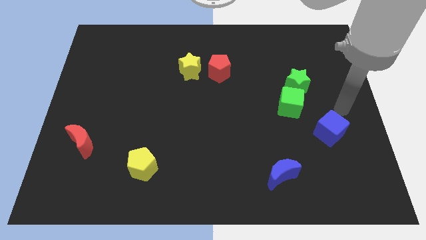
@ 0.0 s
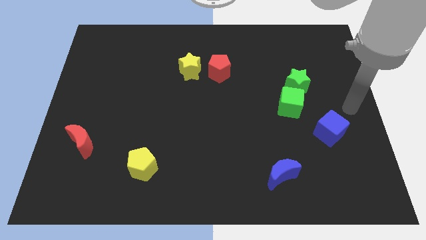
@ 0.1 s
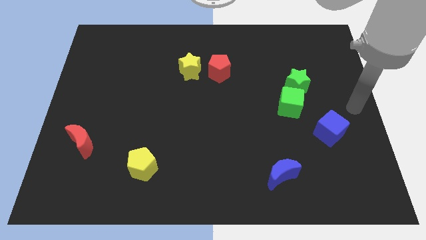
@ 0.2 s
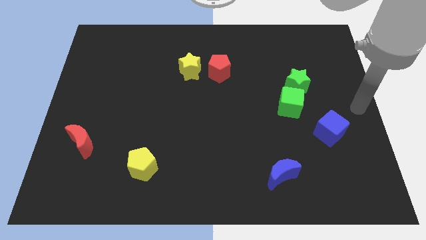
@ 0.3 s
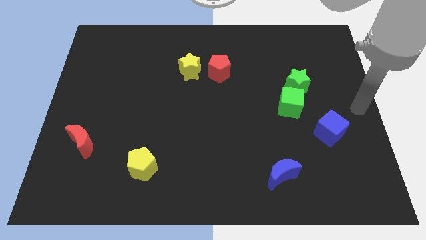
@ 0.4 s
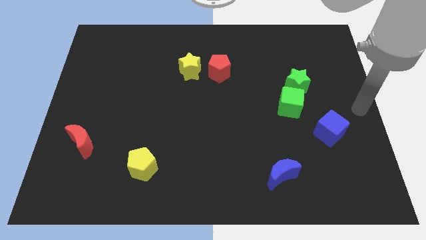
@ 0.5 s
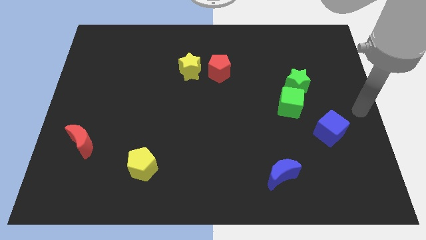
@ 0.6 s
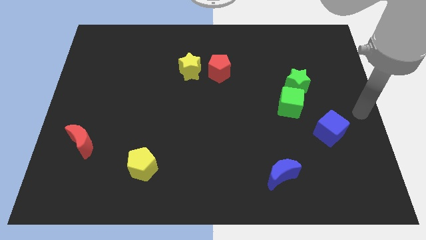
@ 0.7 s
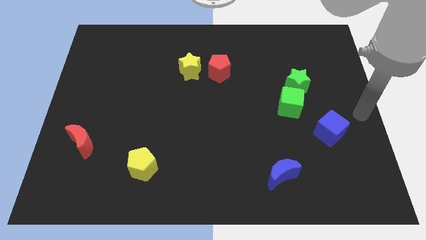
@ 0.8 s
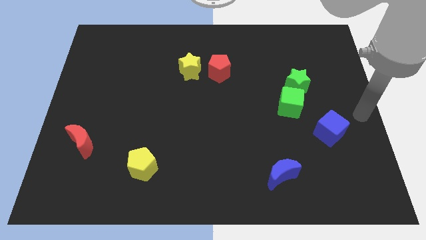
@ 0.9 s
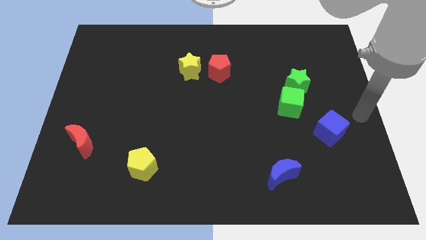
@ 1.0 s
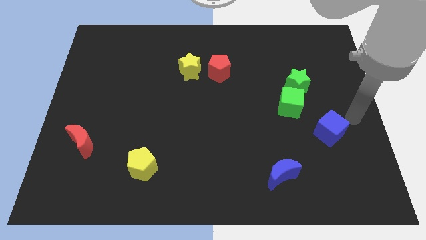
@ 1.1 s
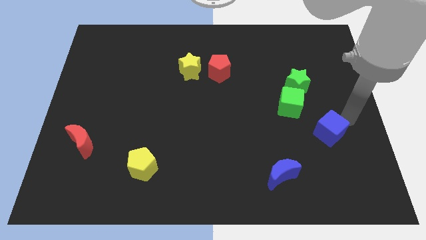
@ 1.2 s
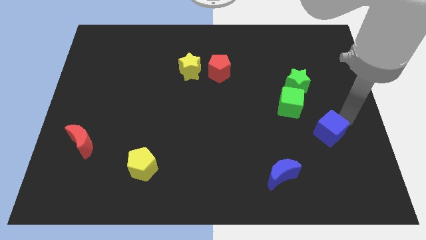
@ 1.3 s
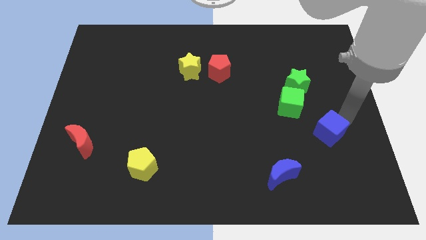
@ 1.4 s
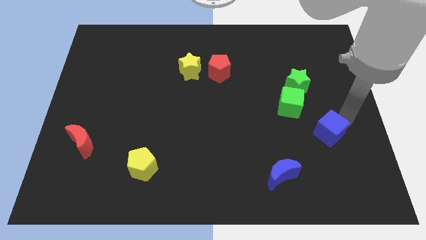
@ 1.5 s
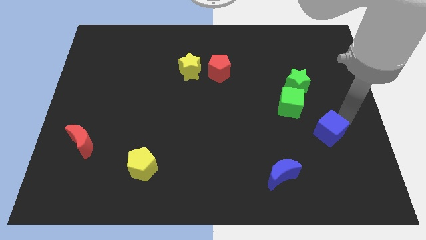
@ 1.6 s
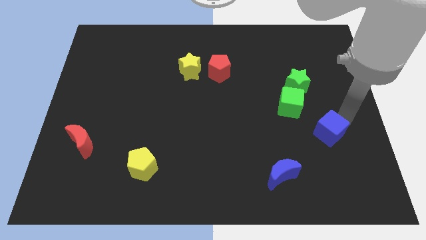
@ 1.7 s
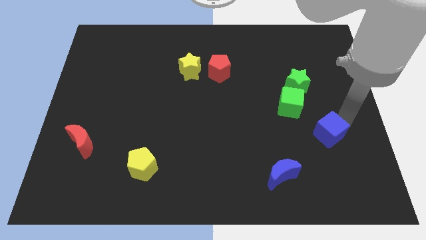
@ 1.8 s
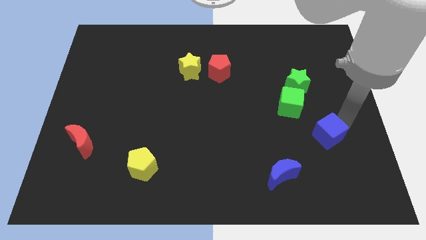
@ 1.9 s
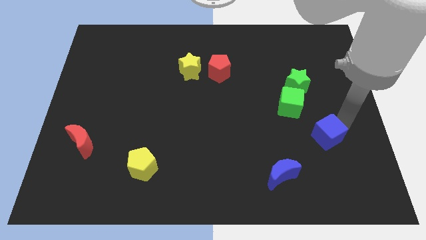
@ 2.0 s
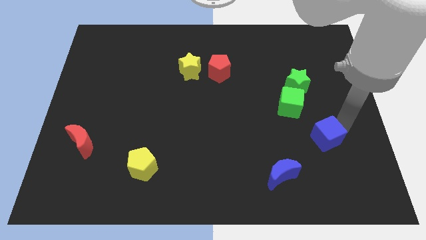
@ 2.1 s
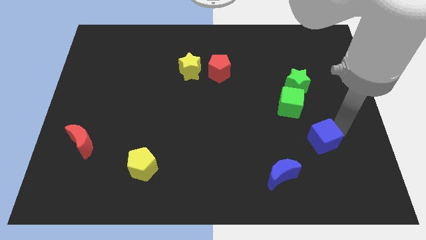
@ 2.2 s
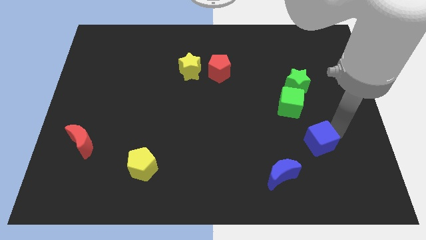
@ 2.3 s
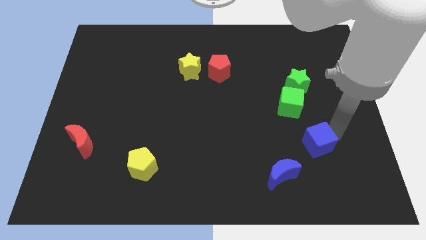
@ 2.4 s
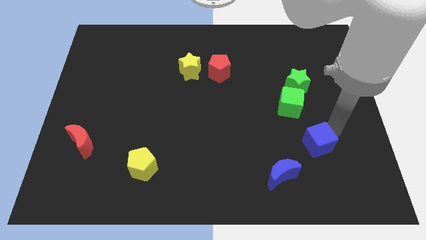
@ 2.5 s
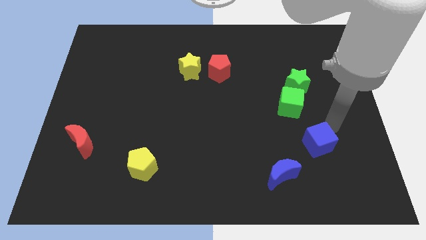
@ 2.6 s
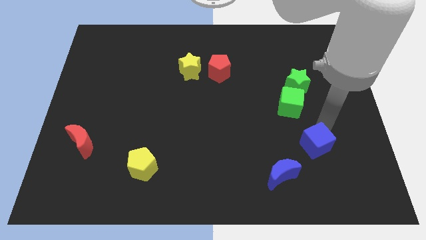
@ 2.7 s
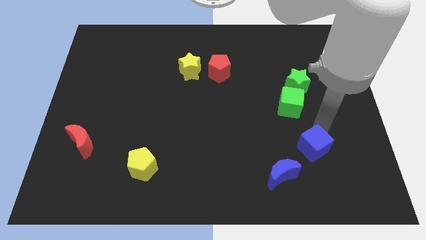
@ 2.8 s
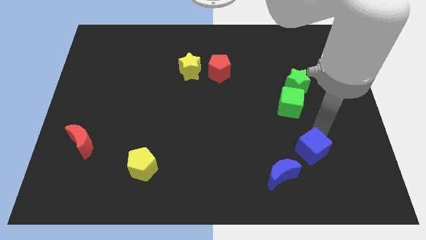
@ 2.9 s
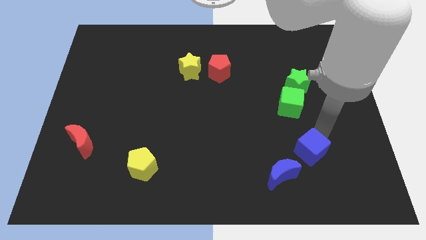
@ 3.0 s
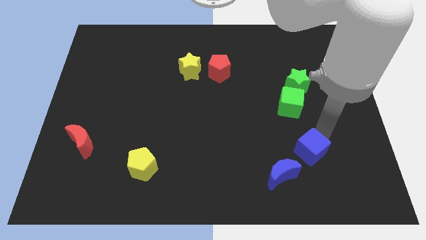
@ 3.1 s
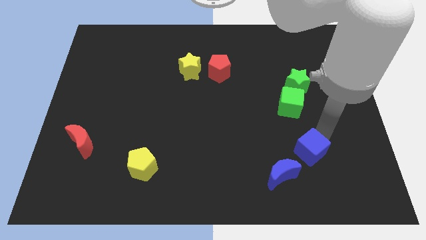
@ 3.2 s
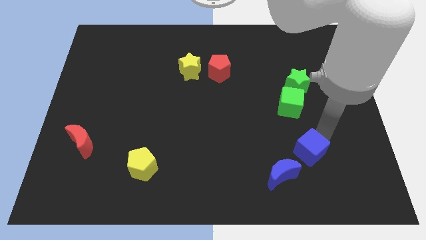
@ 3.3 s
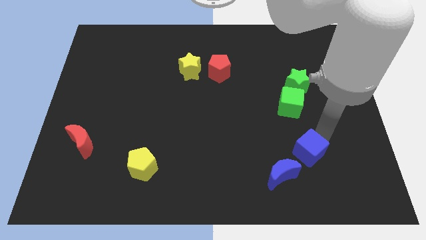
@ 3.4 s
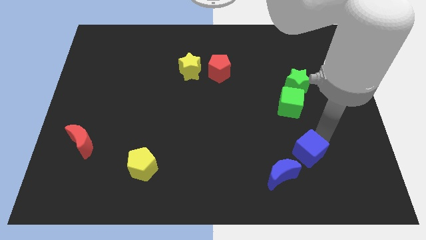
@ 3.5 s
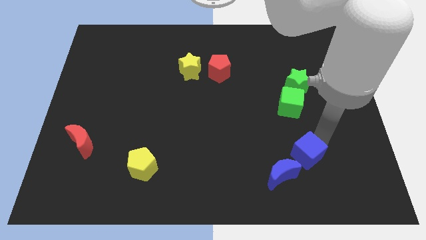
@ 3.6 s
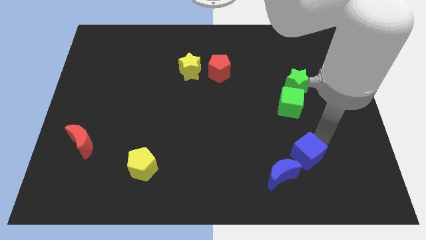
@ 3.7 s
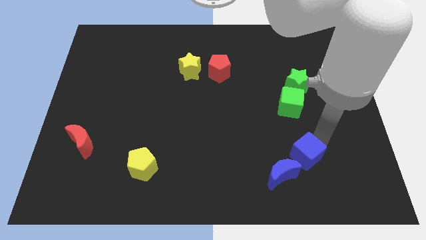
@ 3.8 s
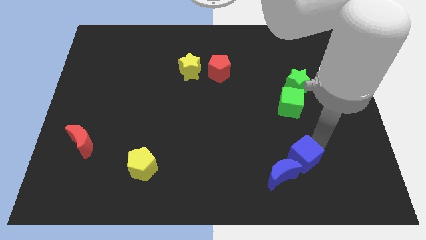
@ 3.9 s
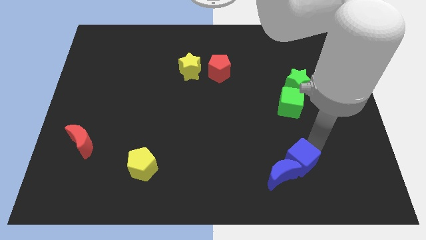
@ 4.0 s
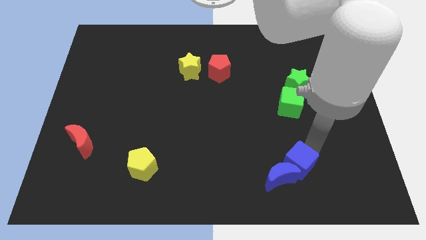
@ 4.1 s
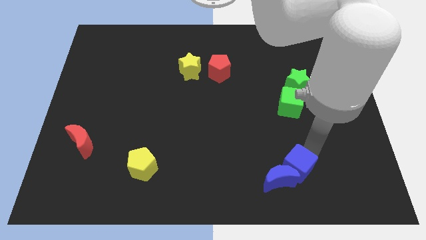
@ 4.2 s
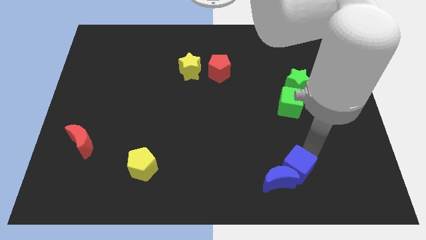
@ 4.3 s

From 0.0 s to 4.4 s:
slide the blue cube into the blue crescent

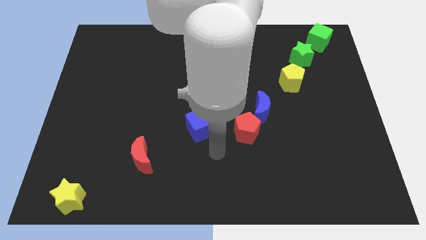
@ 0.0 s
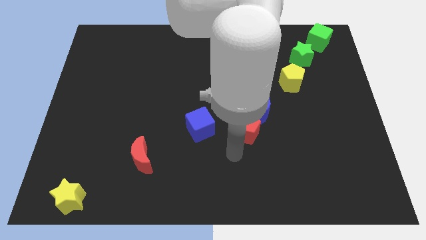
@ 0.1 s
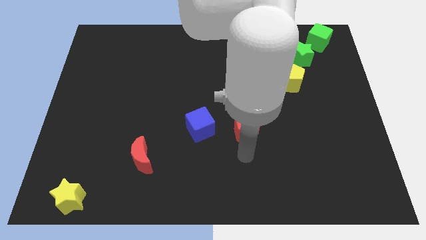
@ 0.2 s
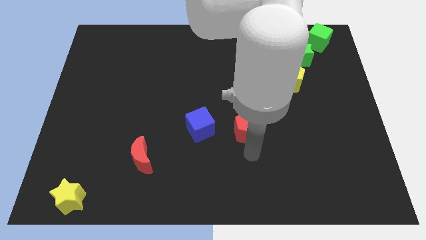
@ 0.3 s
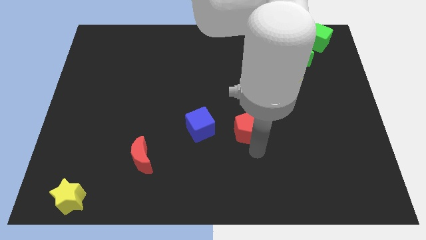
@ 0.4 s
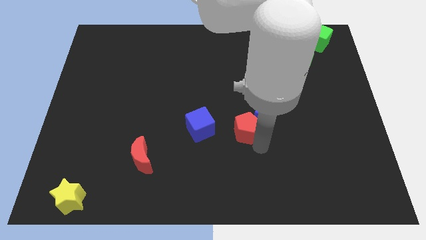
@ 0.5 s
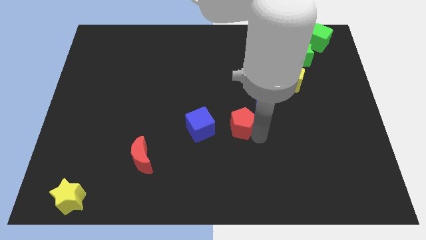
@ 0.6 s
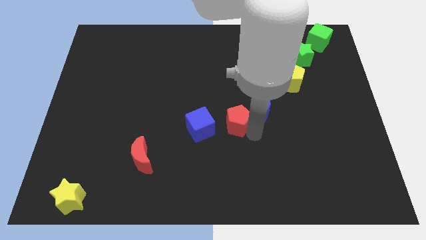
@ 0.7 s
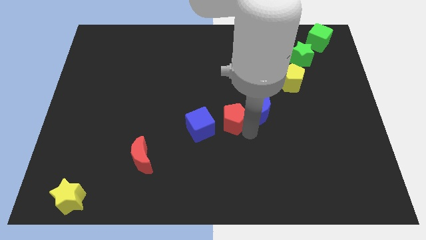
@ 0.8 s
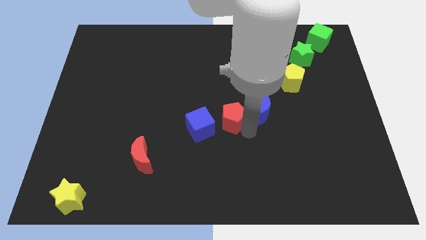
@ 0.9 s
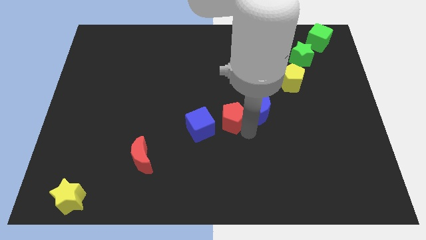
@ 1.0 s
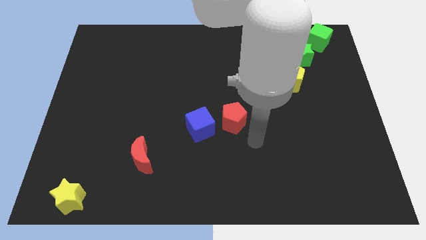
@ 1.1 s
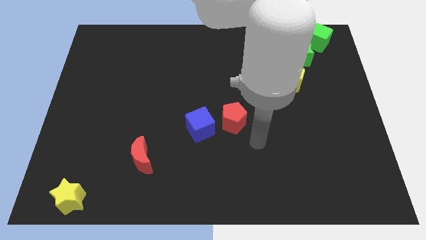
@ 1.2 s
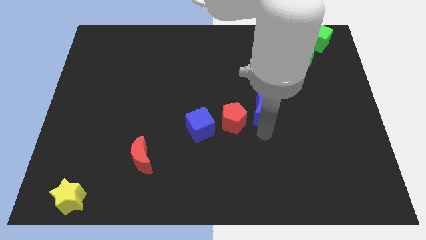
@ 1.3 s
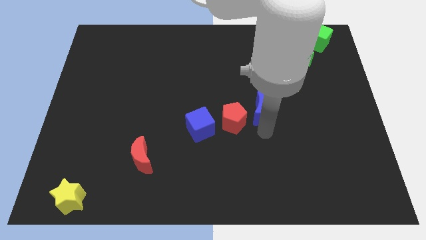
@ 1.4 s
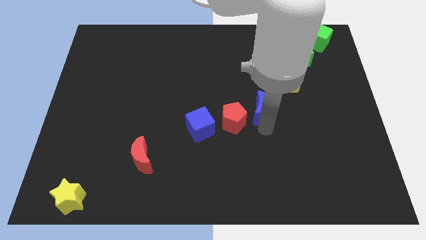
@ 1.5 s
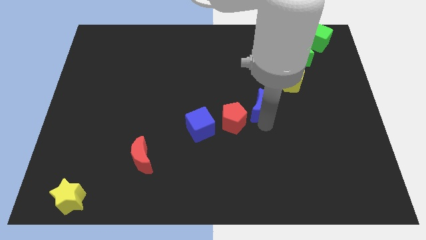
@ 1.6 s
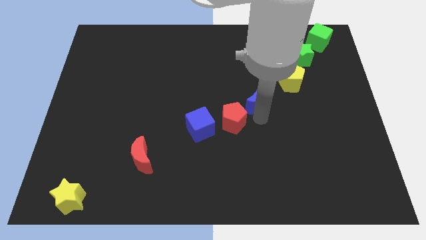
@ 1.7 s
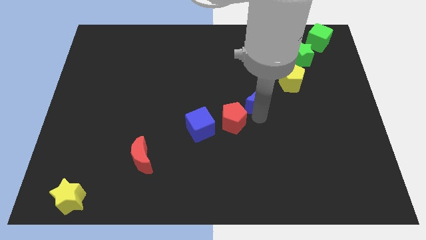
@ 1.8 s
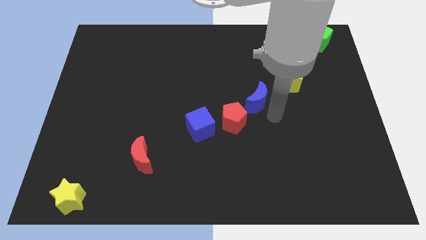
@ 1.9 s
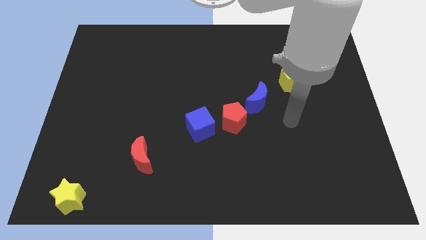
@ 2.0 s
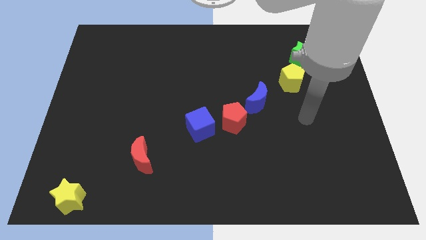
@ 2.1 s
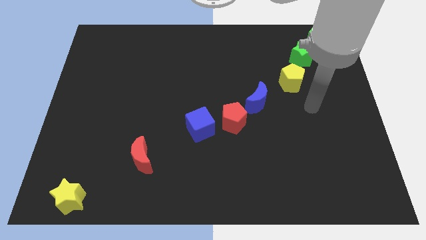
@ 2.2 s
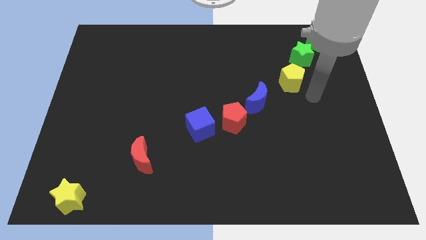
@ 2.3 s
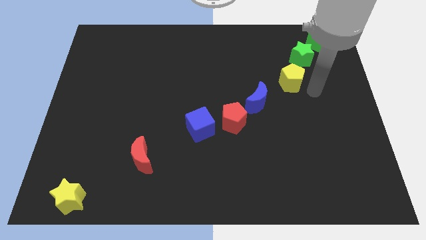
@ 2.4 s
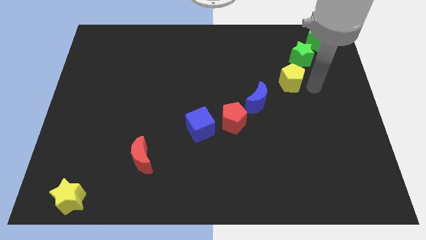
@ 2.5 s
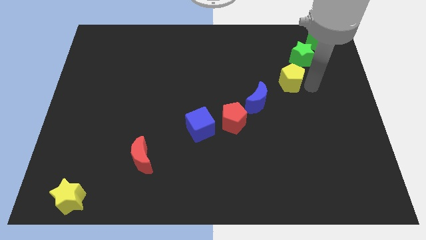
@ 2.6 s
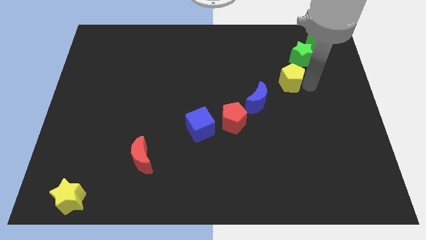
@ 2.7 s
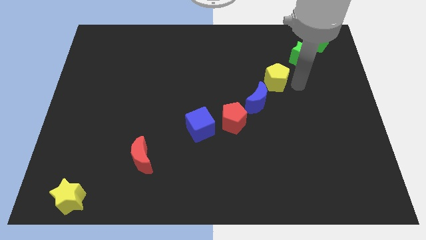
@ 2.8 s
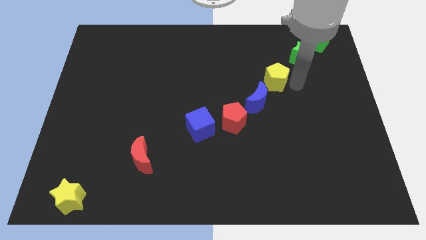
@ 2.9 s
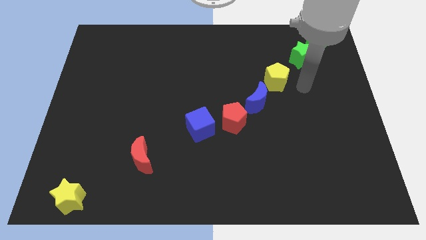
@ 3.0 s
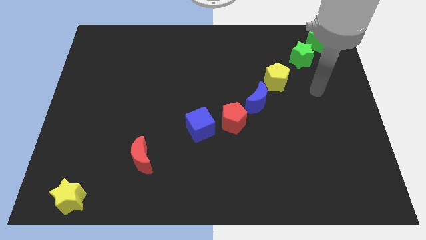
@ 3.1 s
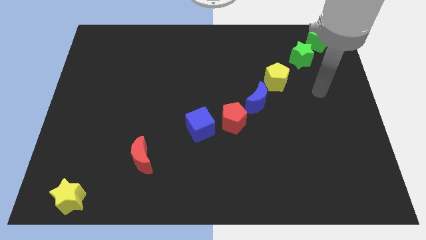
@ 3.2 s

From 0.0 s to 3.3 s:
move the red pentagon bue moon and yellow pentagon slightly to the left side of the table

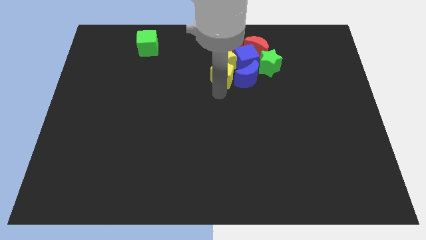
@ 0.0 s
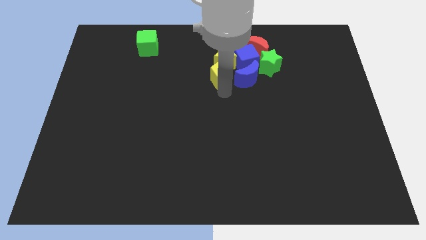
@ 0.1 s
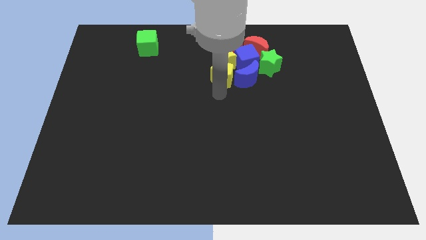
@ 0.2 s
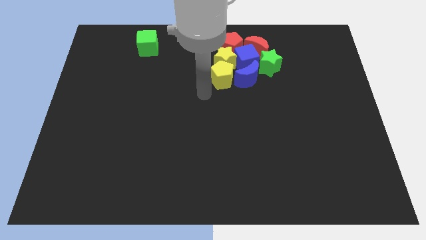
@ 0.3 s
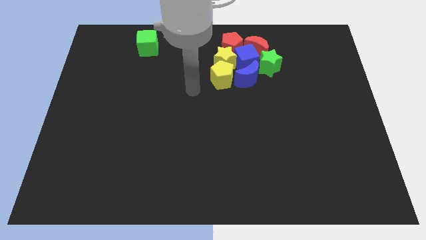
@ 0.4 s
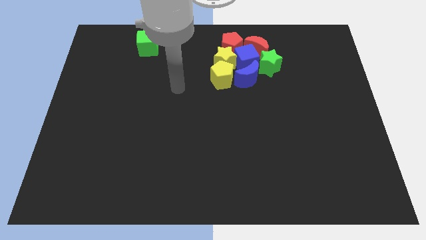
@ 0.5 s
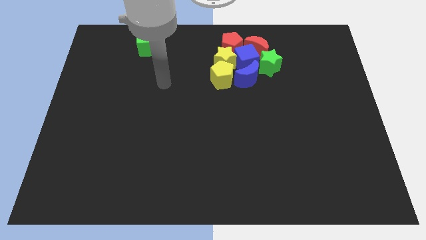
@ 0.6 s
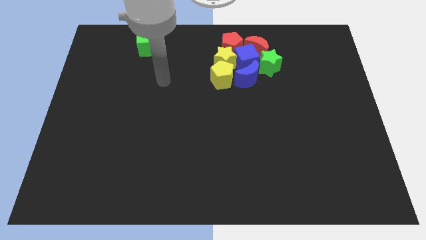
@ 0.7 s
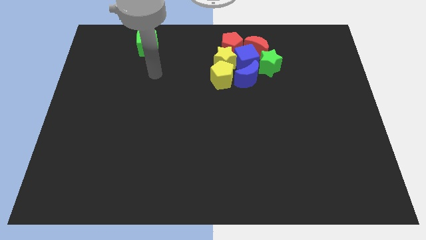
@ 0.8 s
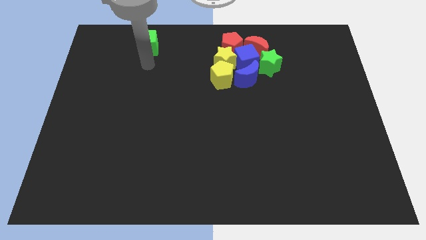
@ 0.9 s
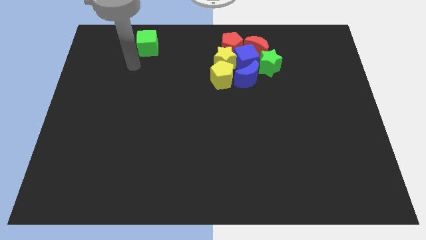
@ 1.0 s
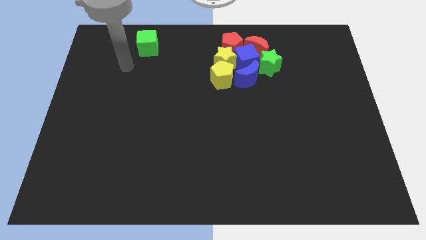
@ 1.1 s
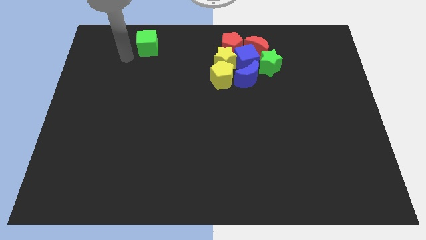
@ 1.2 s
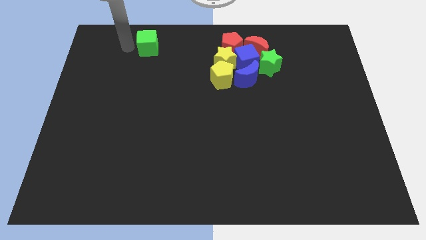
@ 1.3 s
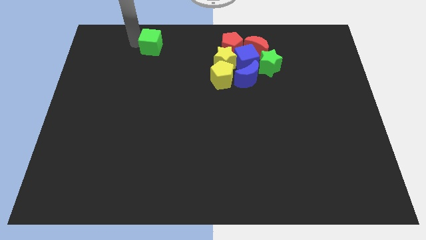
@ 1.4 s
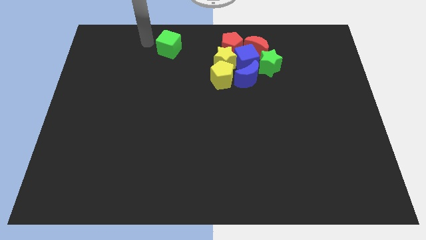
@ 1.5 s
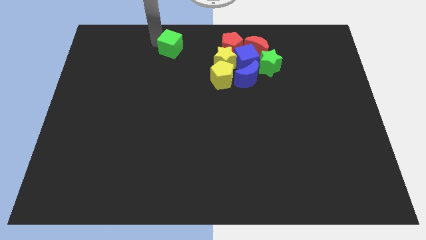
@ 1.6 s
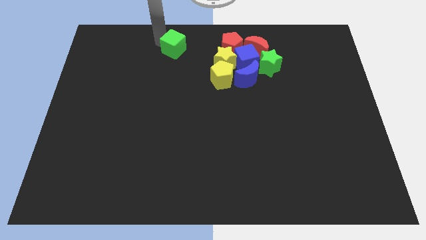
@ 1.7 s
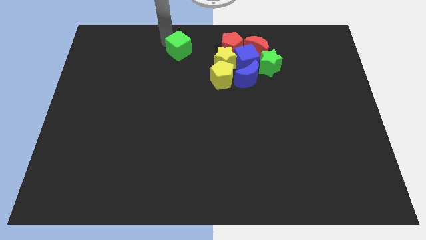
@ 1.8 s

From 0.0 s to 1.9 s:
slightly move the green cube towards other blocks
